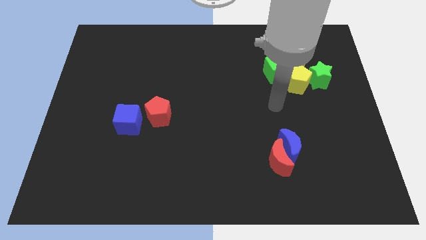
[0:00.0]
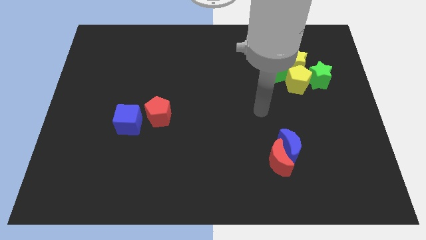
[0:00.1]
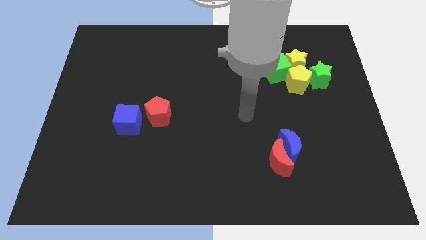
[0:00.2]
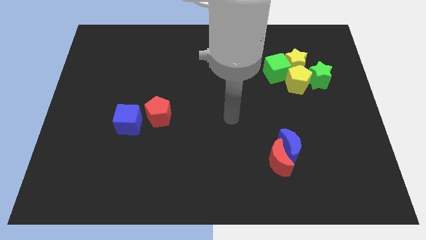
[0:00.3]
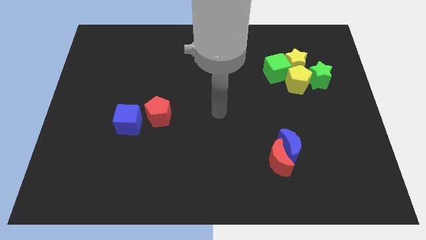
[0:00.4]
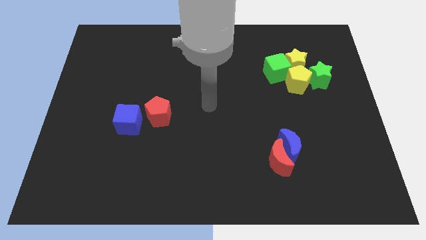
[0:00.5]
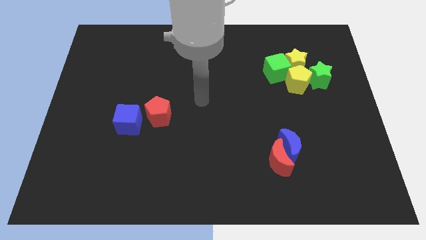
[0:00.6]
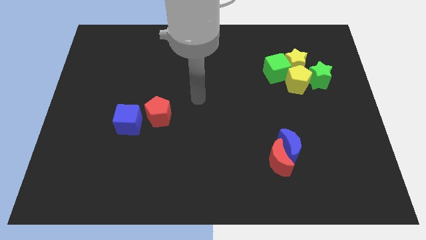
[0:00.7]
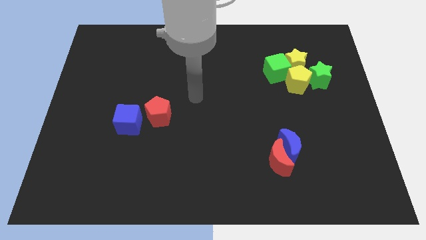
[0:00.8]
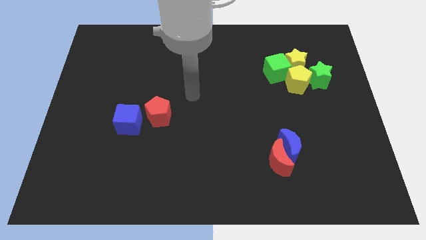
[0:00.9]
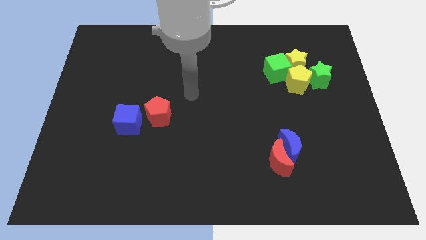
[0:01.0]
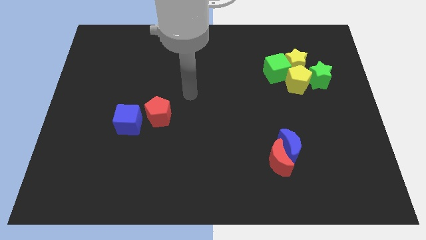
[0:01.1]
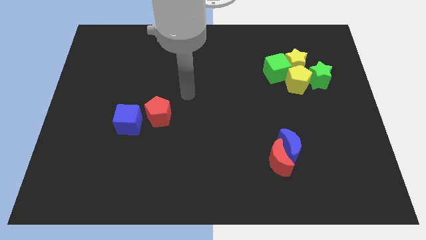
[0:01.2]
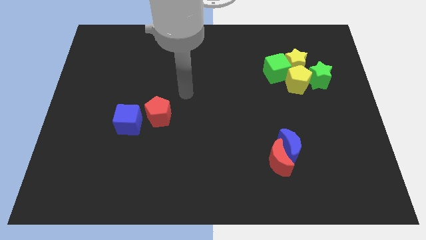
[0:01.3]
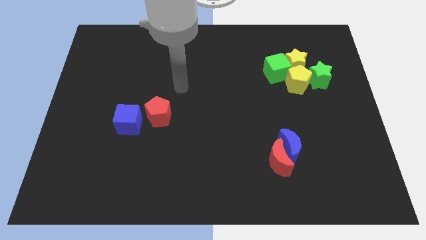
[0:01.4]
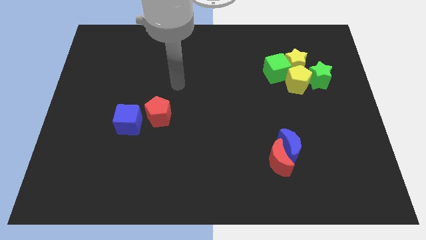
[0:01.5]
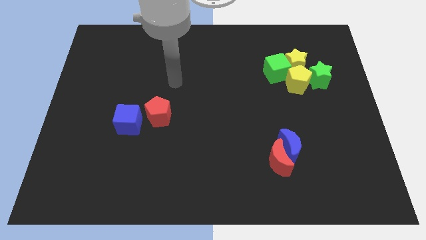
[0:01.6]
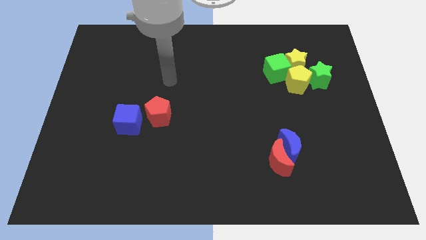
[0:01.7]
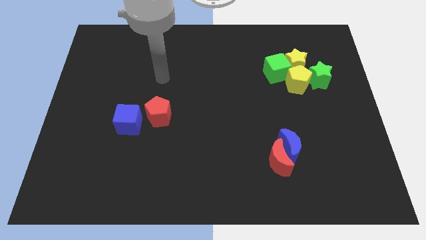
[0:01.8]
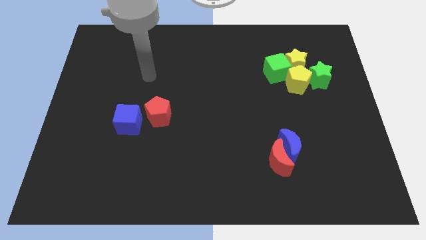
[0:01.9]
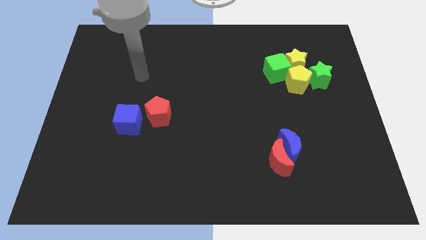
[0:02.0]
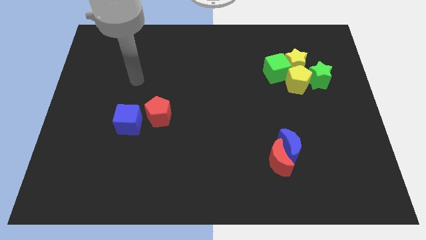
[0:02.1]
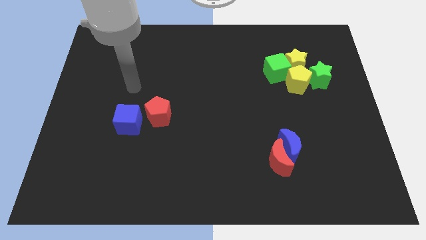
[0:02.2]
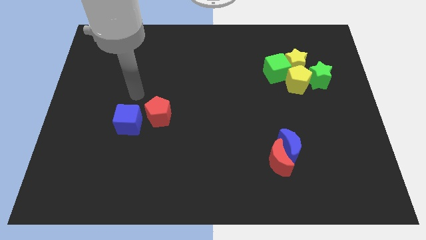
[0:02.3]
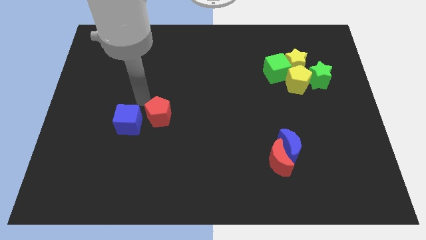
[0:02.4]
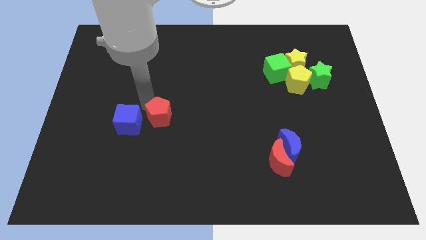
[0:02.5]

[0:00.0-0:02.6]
move your arma nd point above the red pentagon

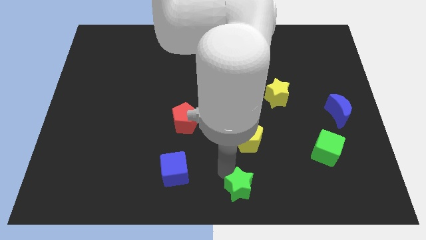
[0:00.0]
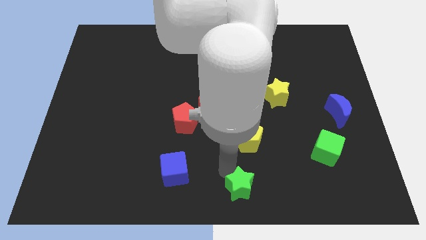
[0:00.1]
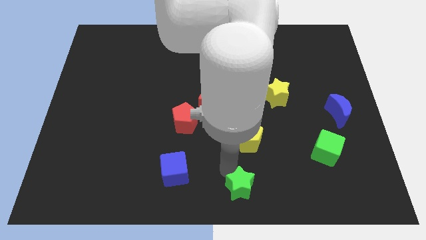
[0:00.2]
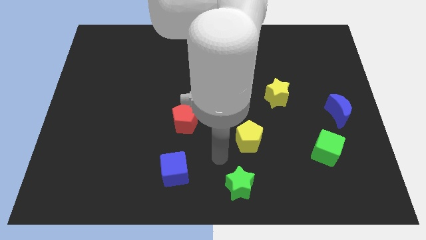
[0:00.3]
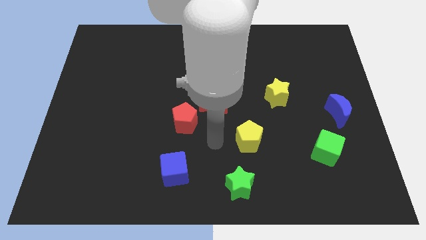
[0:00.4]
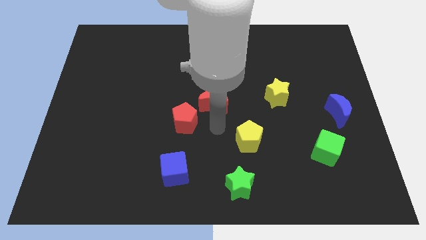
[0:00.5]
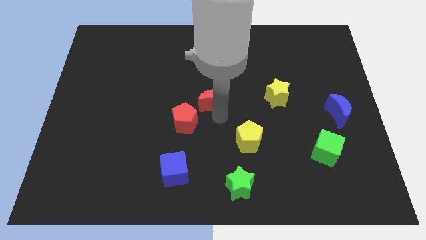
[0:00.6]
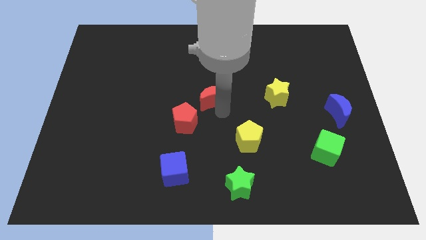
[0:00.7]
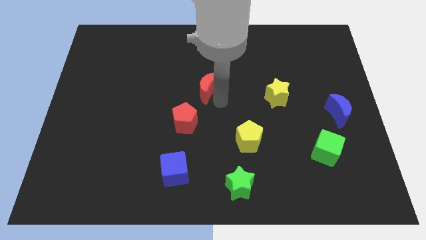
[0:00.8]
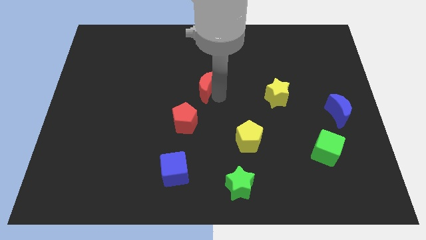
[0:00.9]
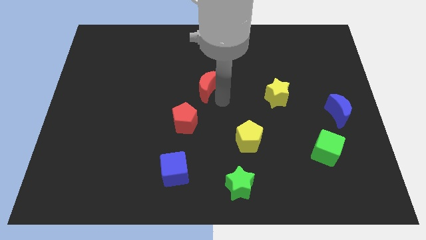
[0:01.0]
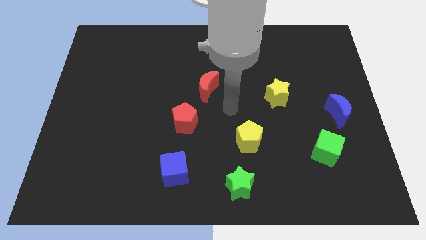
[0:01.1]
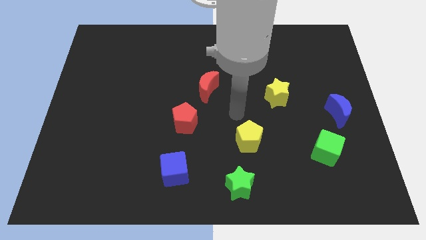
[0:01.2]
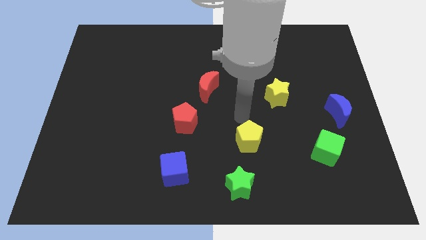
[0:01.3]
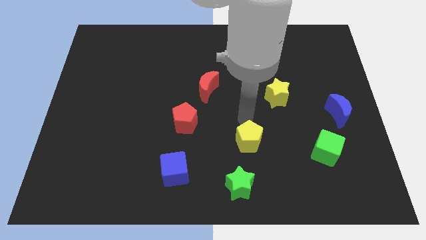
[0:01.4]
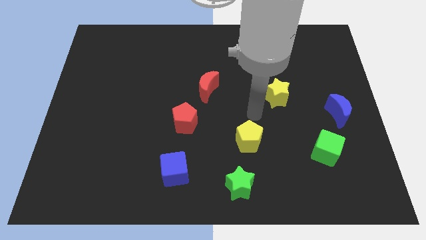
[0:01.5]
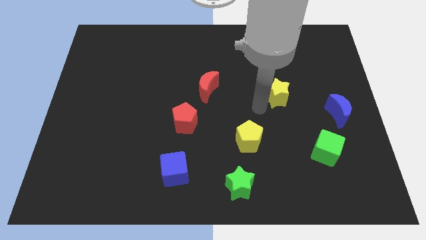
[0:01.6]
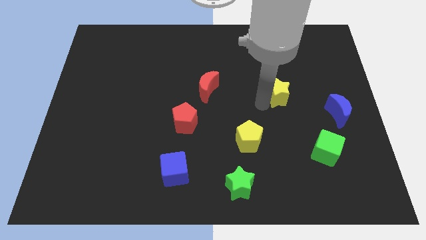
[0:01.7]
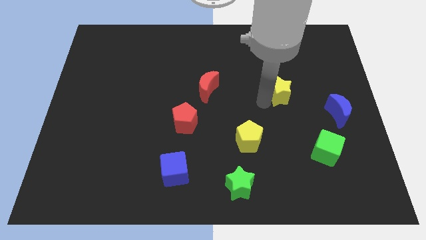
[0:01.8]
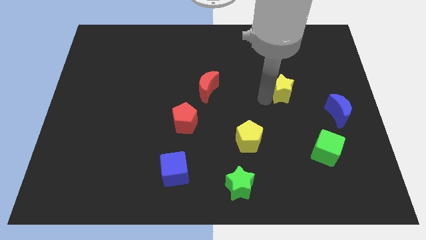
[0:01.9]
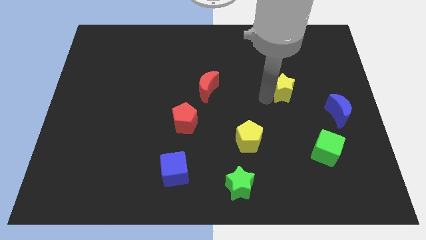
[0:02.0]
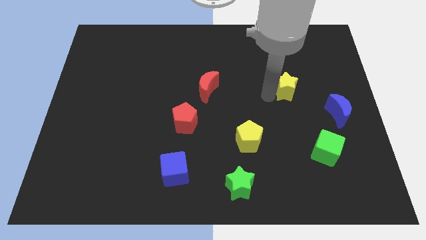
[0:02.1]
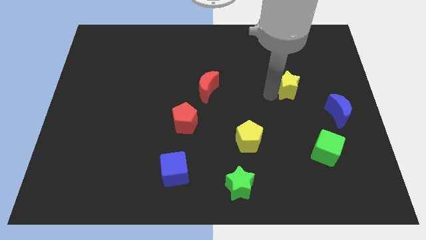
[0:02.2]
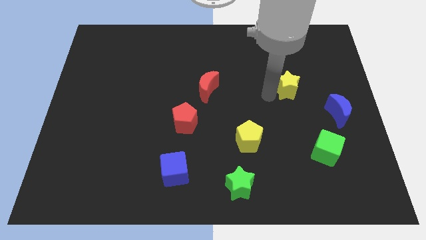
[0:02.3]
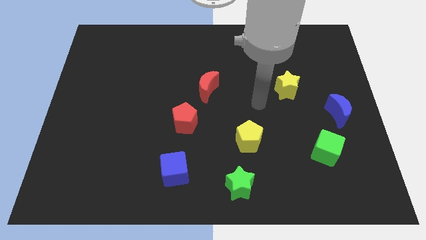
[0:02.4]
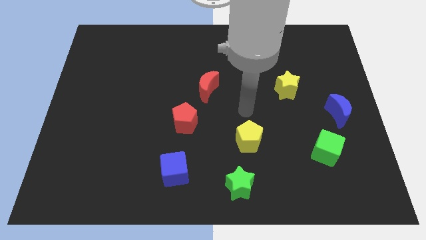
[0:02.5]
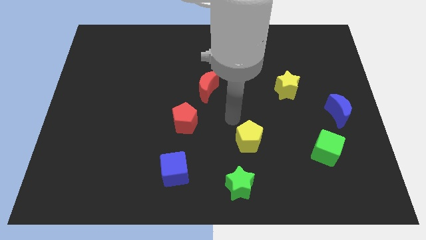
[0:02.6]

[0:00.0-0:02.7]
push the yellow star slightly upward

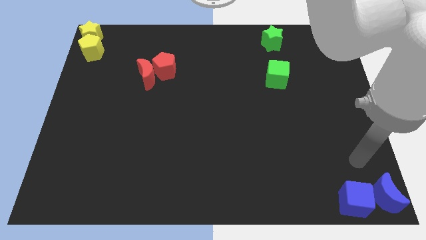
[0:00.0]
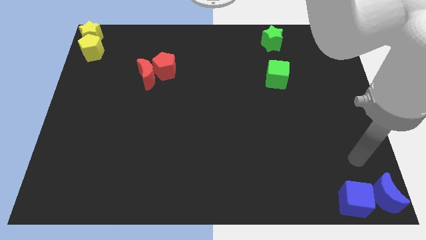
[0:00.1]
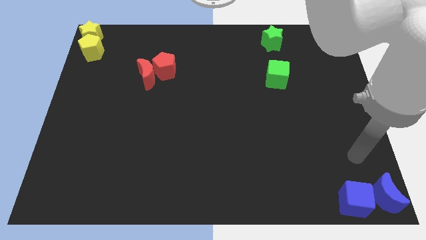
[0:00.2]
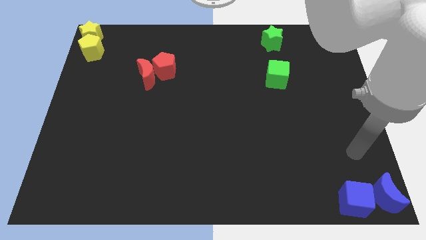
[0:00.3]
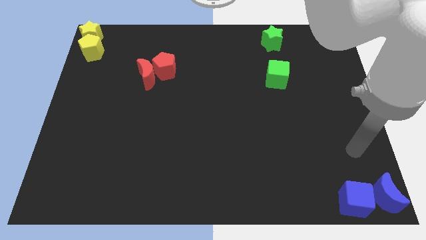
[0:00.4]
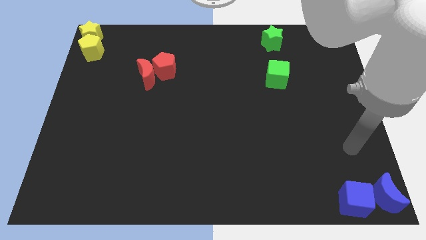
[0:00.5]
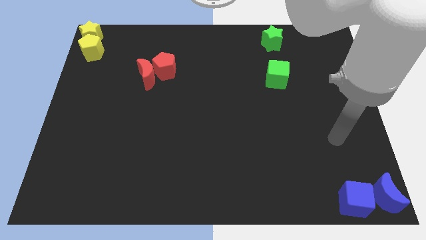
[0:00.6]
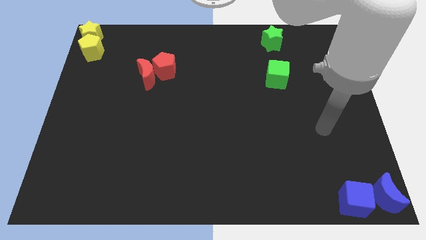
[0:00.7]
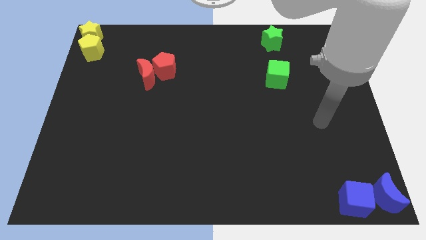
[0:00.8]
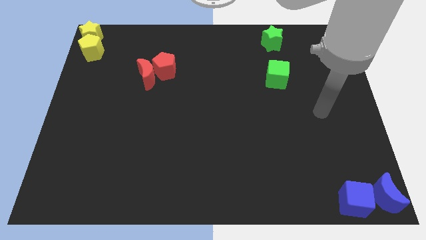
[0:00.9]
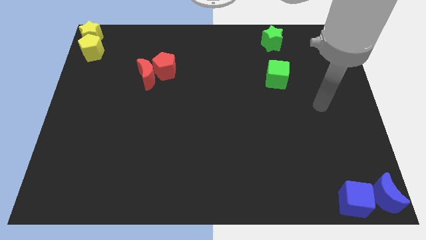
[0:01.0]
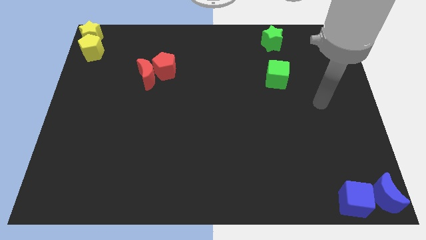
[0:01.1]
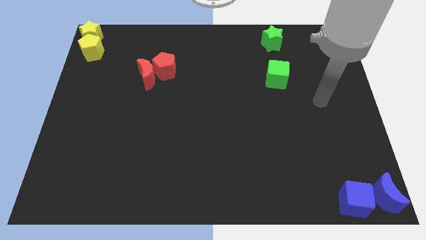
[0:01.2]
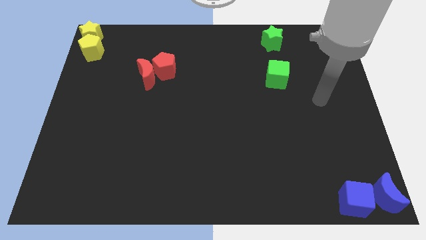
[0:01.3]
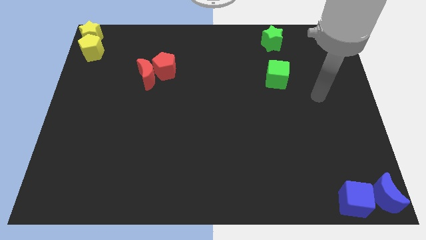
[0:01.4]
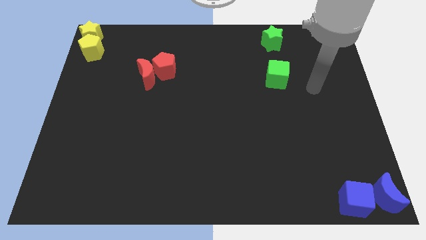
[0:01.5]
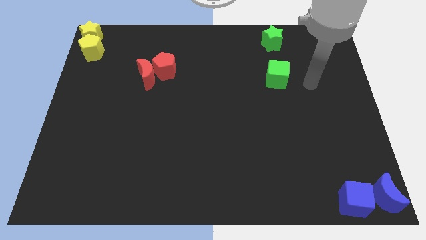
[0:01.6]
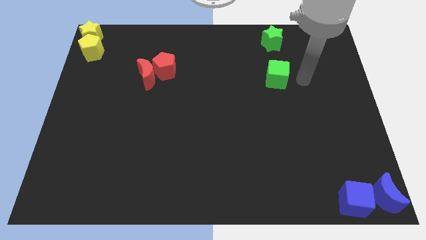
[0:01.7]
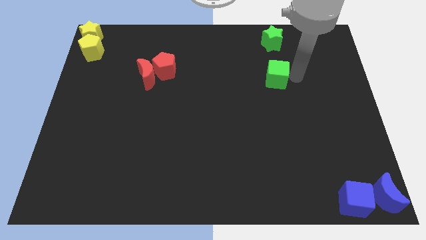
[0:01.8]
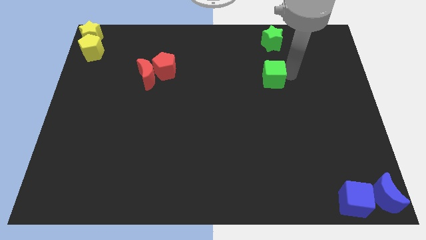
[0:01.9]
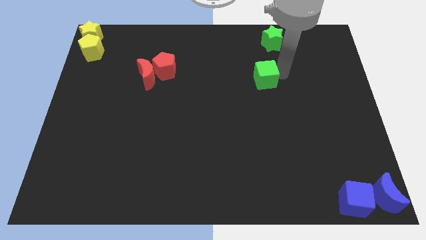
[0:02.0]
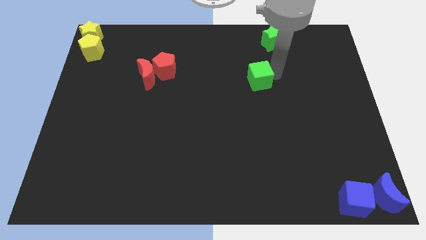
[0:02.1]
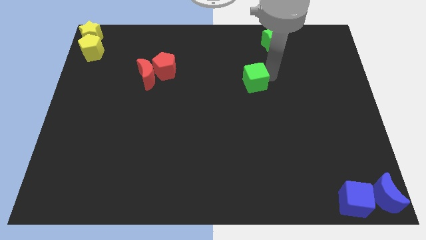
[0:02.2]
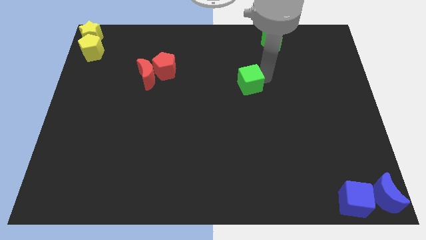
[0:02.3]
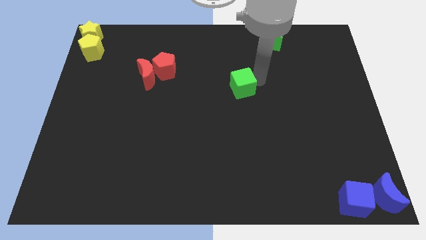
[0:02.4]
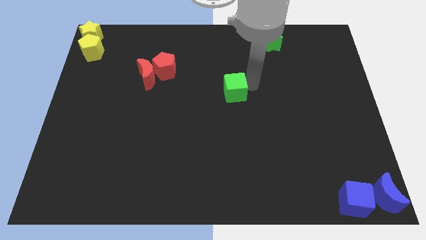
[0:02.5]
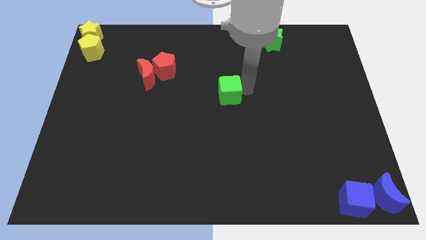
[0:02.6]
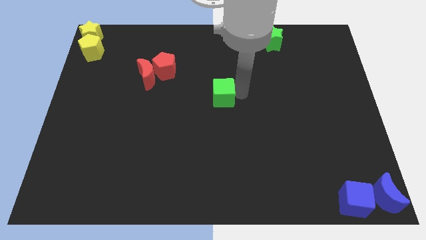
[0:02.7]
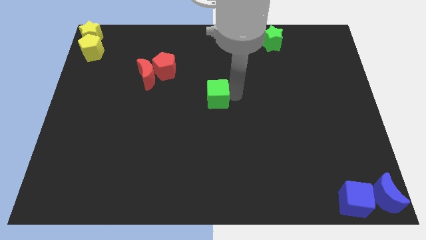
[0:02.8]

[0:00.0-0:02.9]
move the green cube to the center of the board

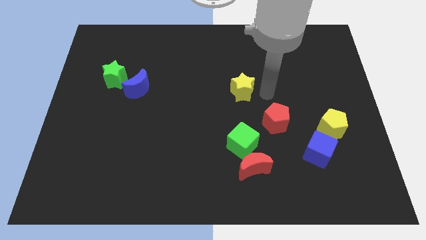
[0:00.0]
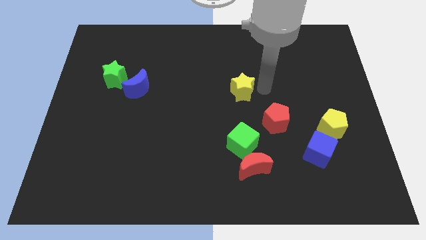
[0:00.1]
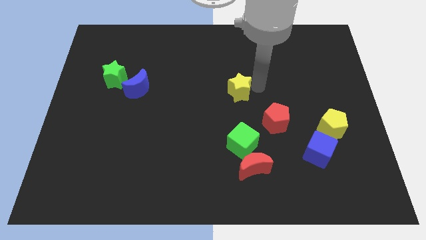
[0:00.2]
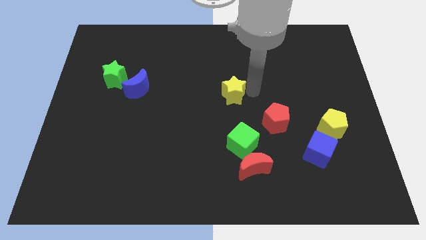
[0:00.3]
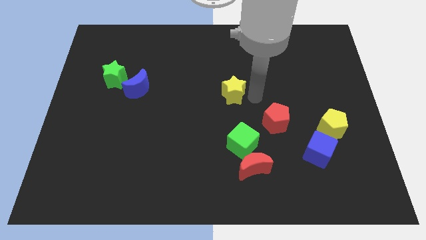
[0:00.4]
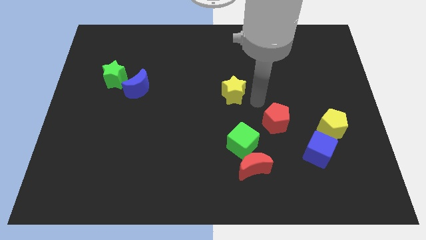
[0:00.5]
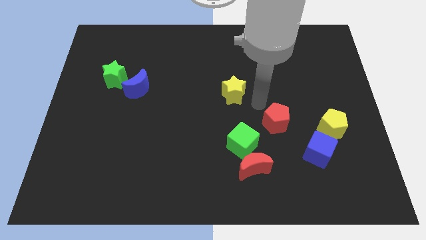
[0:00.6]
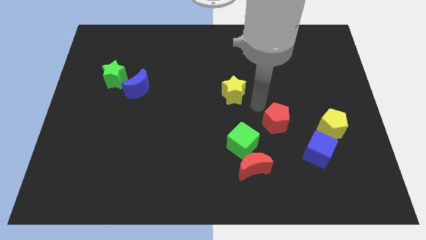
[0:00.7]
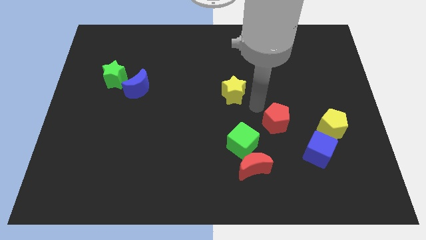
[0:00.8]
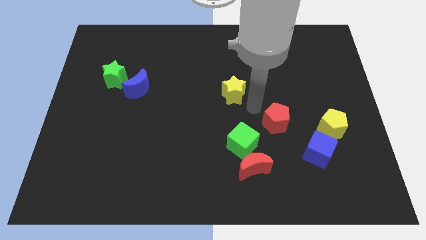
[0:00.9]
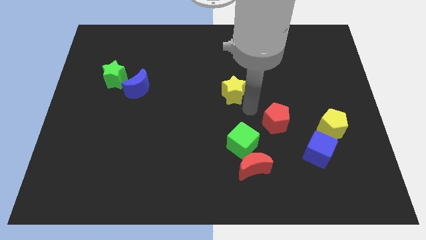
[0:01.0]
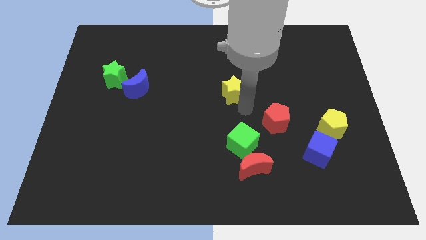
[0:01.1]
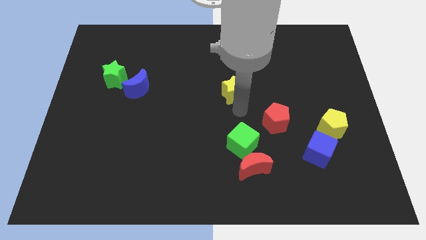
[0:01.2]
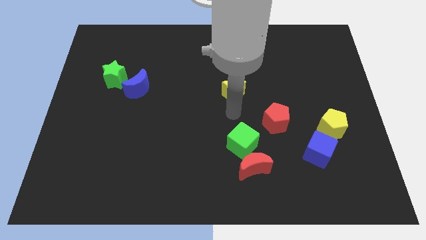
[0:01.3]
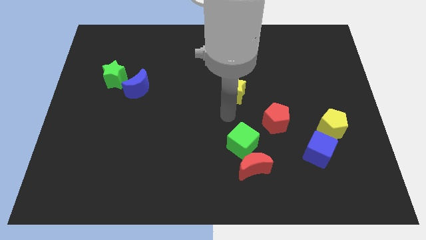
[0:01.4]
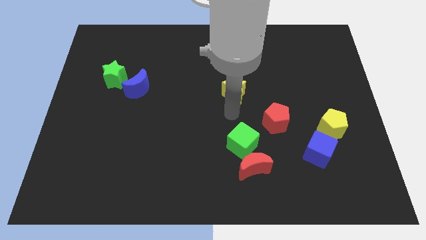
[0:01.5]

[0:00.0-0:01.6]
place your hand in between yellow star and green cube
